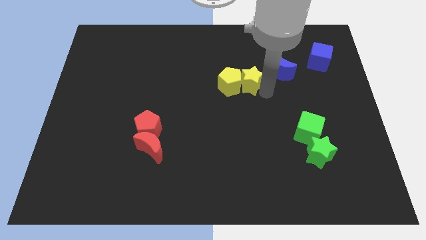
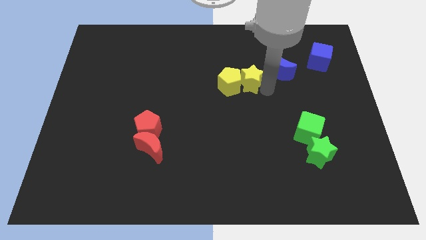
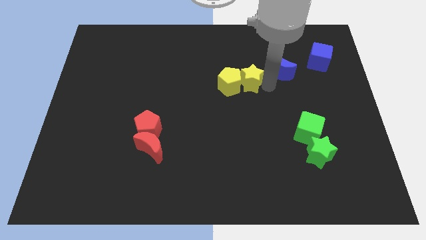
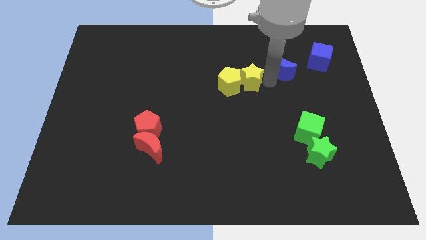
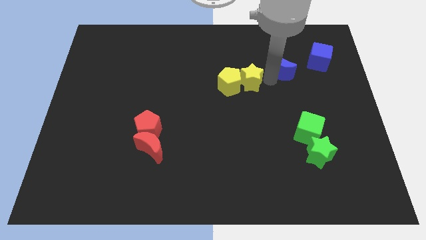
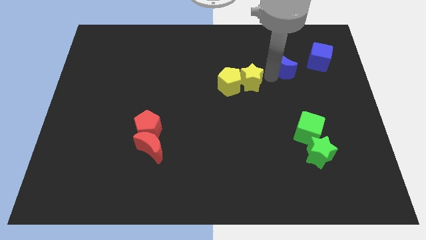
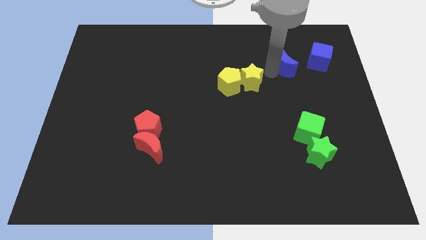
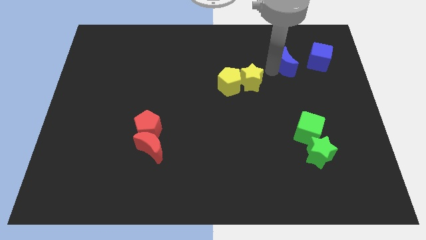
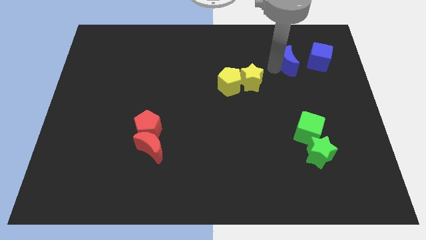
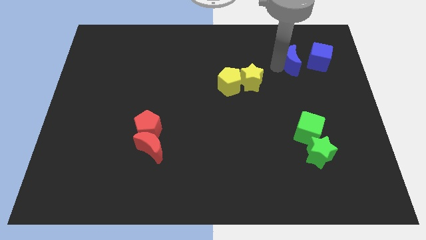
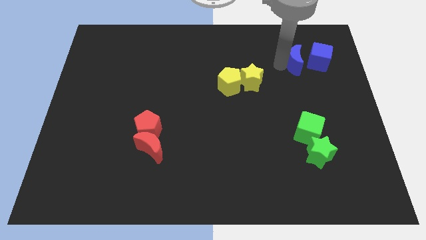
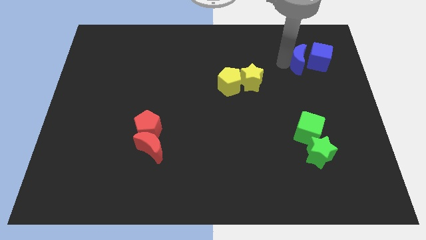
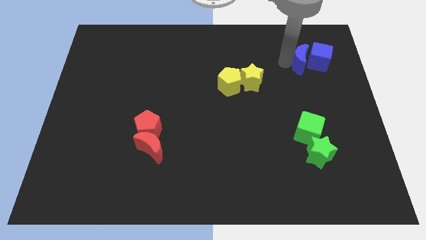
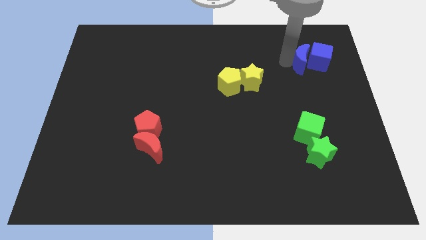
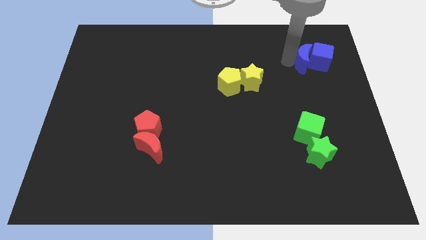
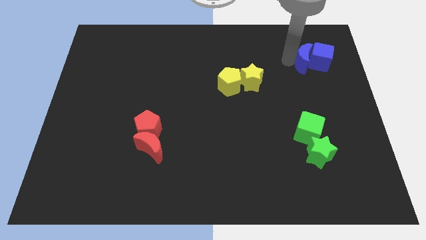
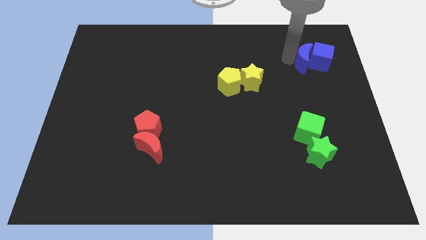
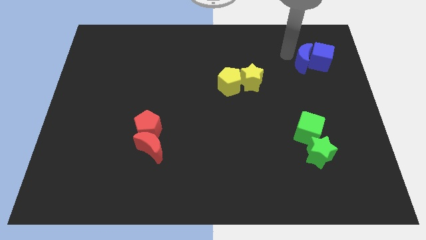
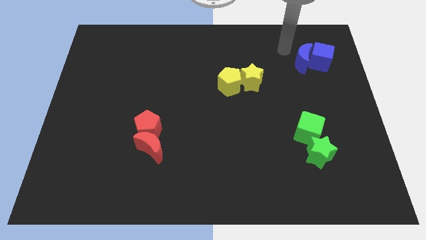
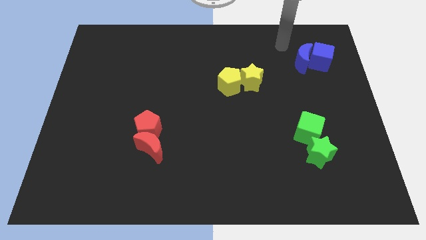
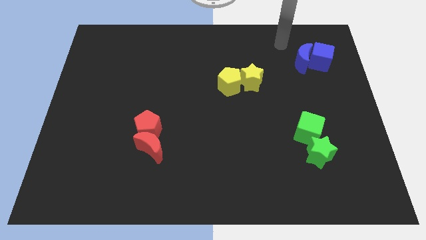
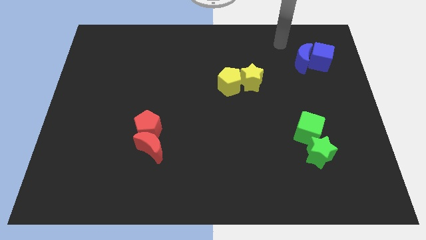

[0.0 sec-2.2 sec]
move your arm in between the yellow and blue blocks

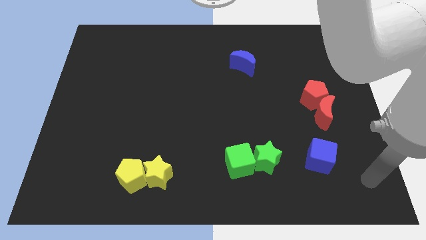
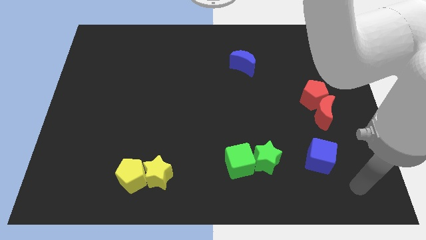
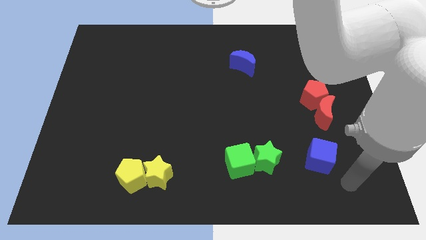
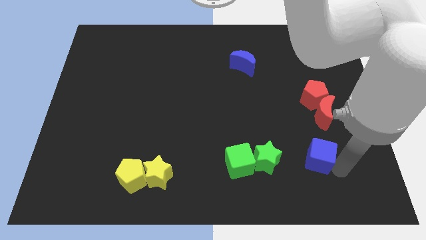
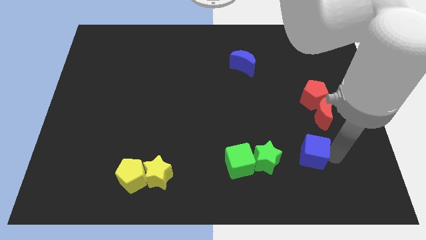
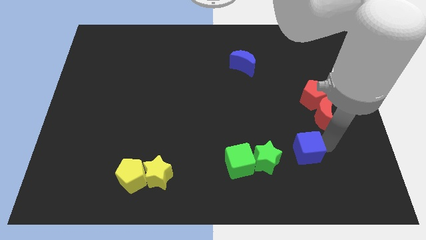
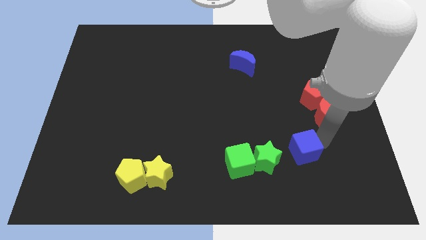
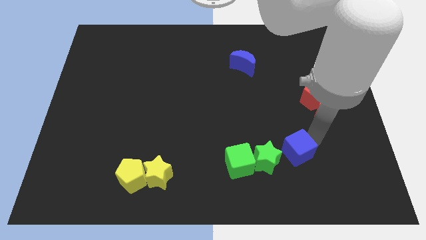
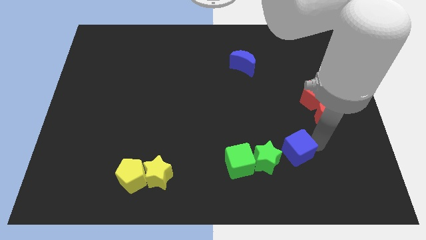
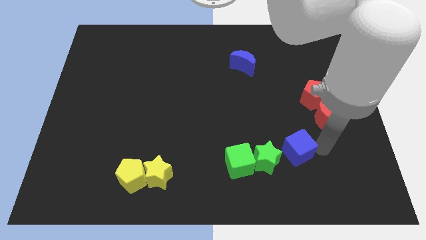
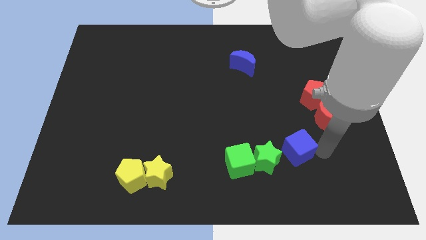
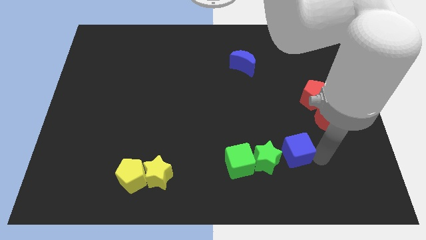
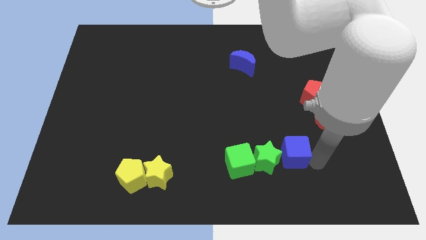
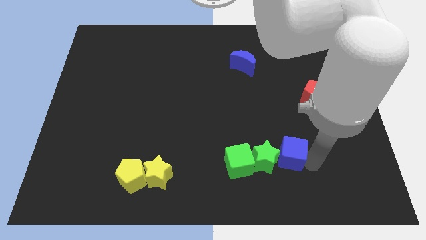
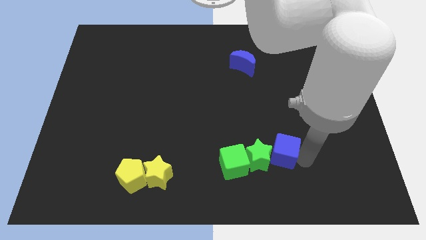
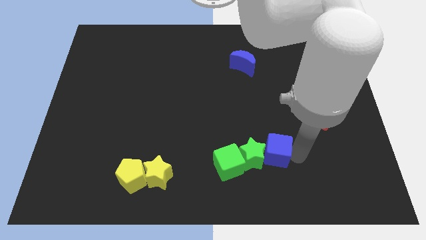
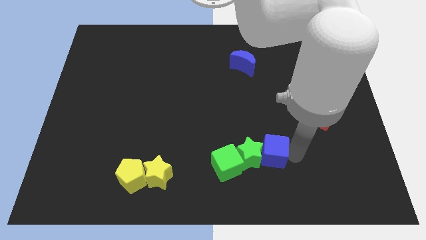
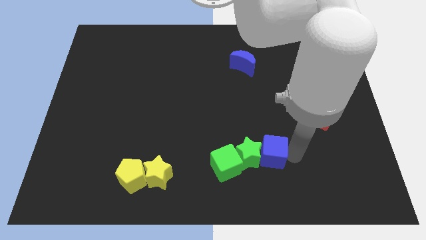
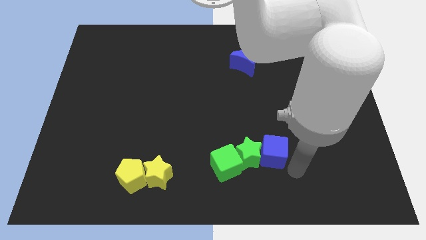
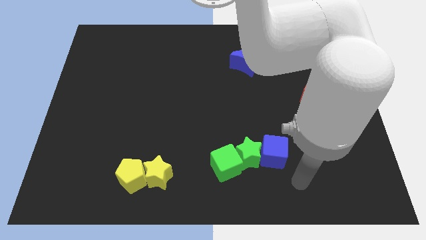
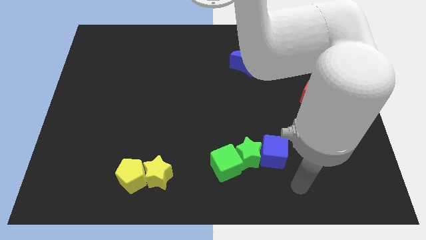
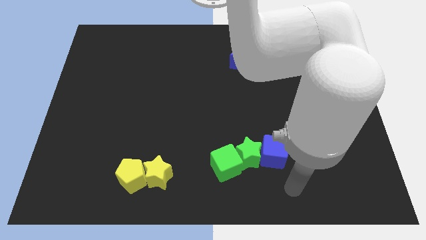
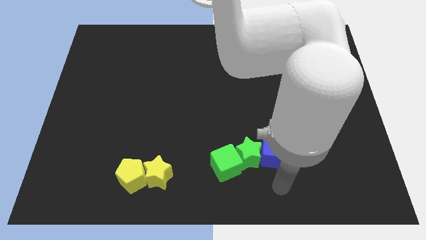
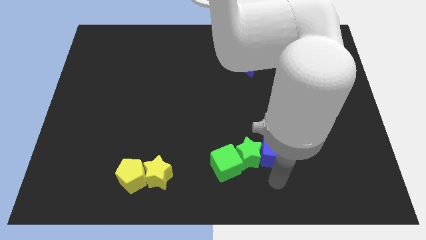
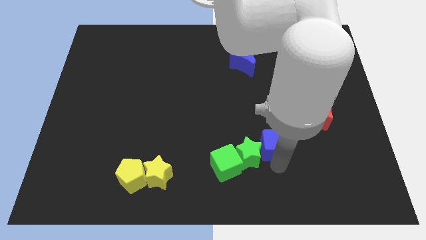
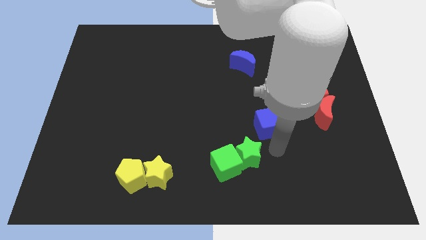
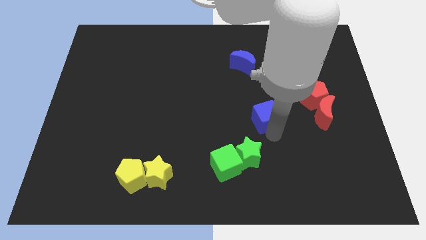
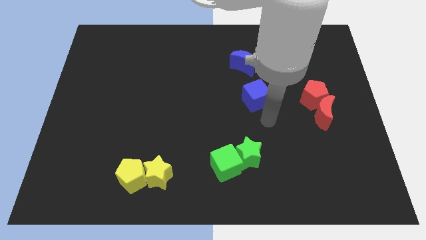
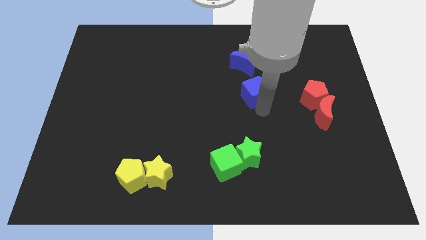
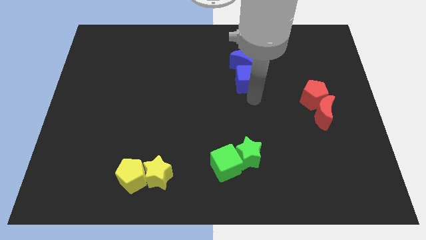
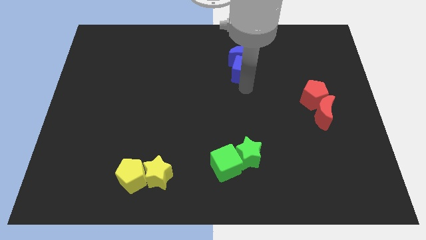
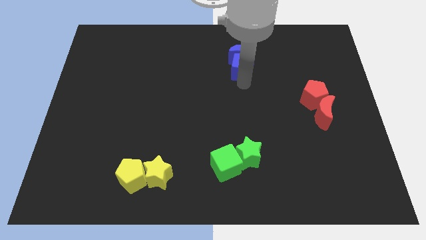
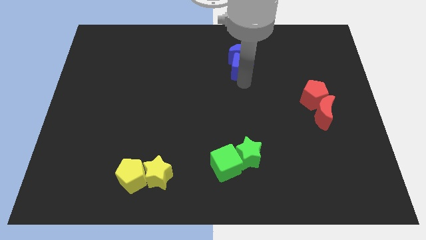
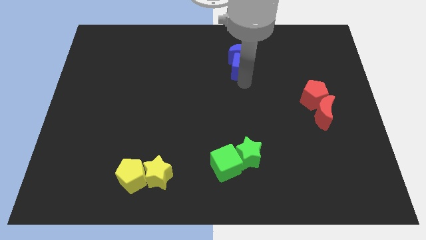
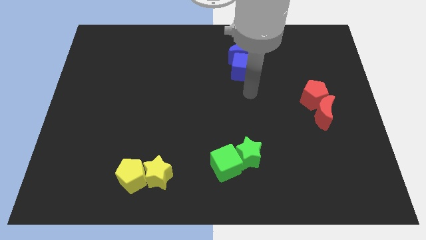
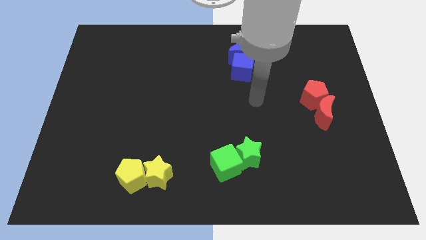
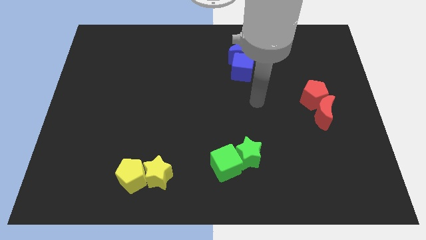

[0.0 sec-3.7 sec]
push blue cube close to blue crescent

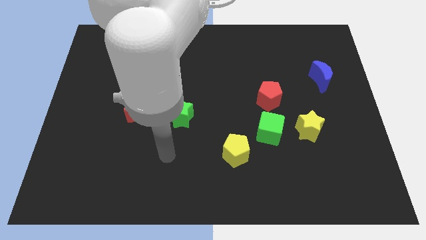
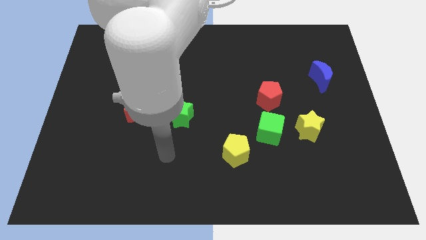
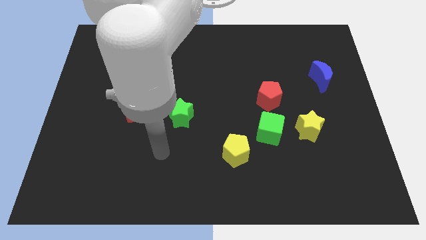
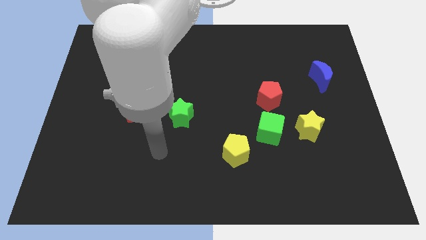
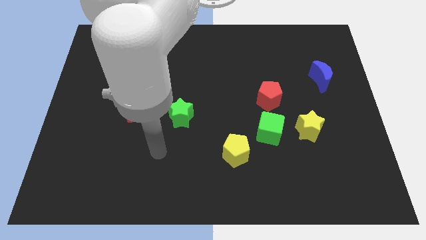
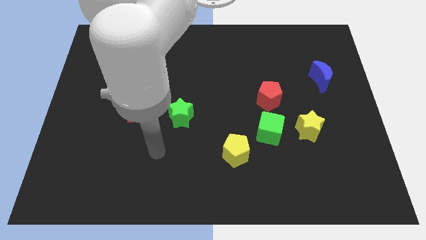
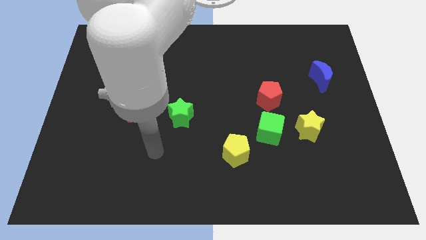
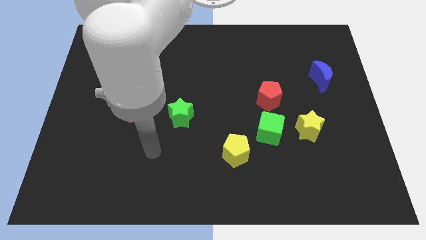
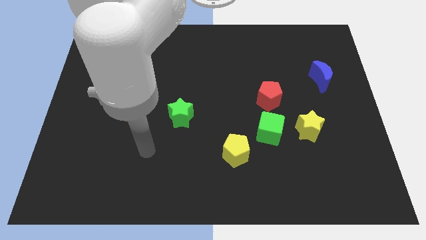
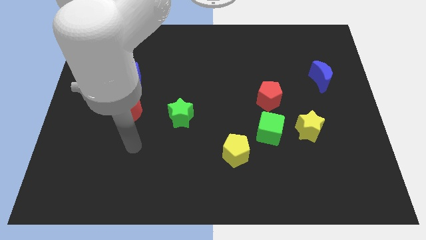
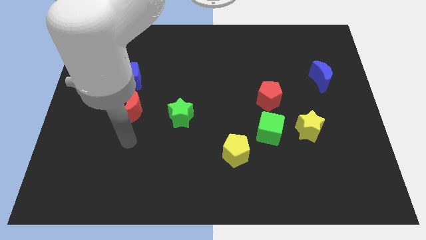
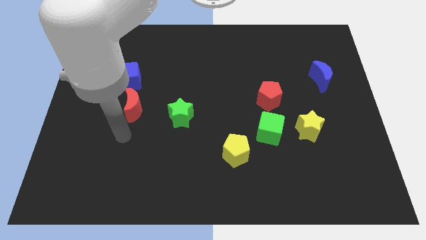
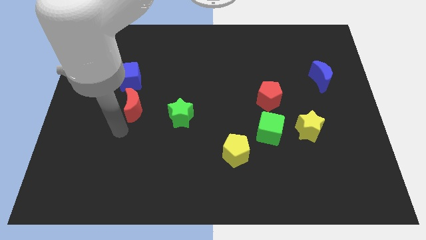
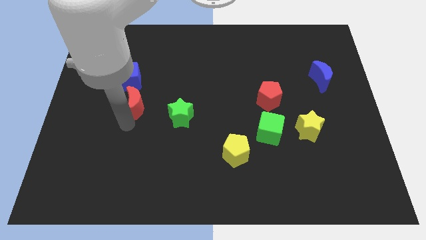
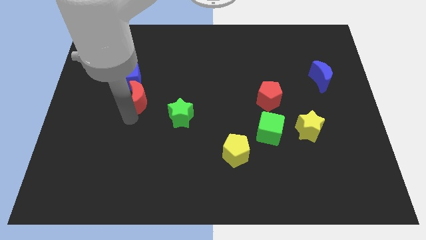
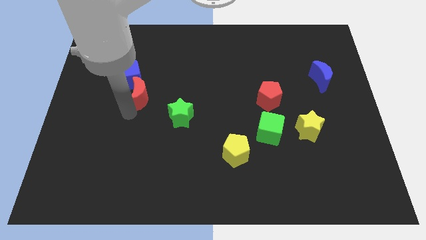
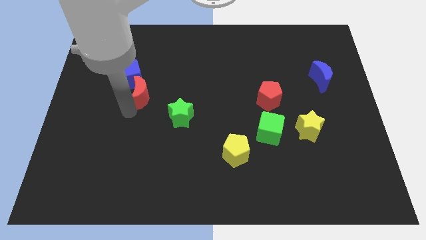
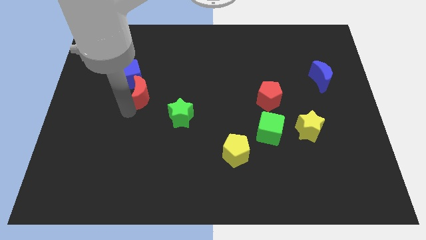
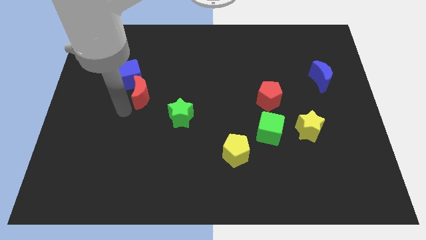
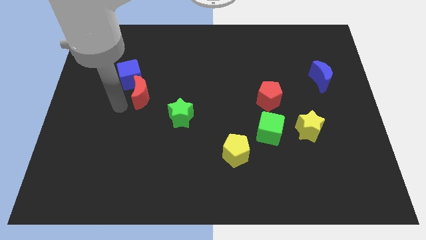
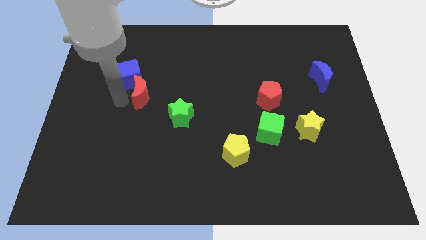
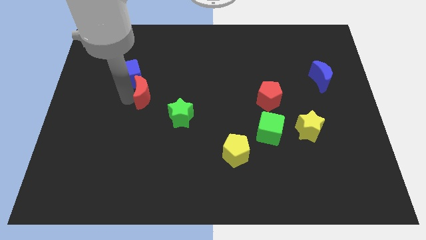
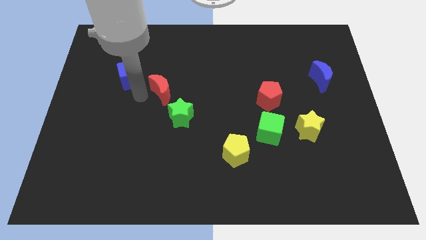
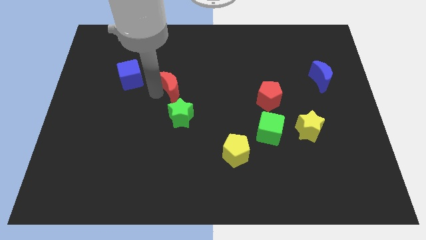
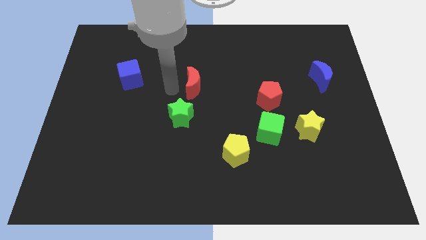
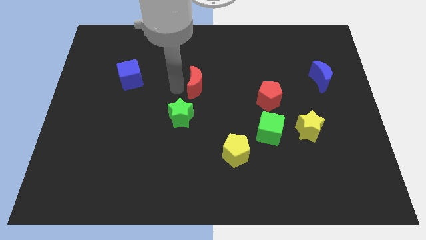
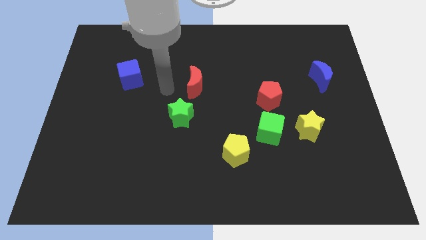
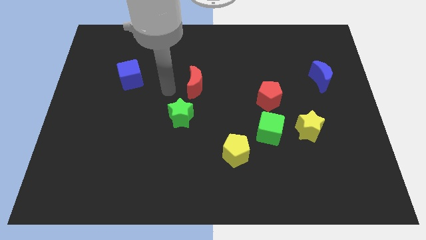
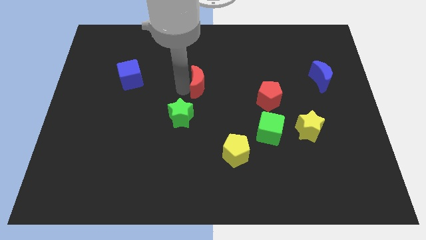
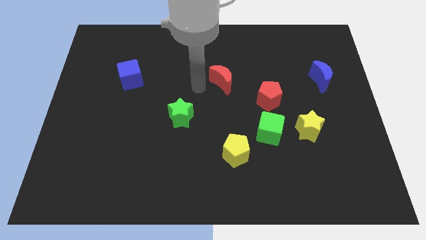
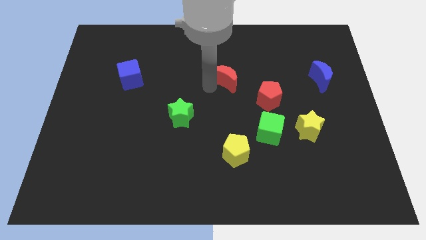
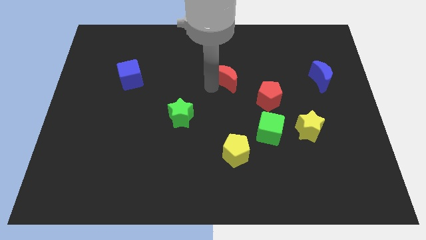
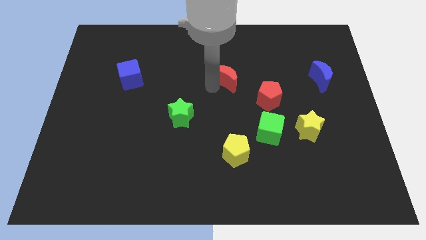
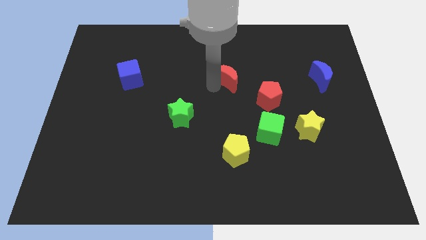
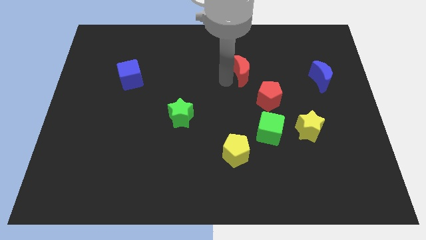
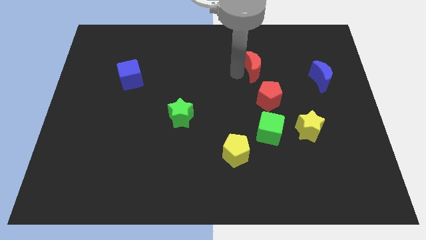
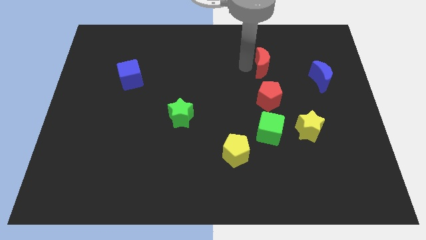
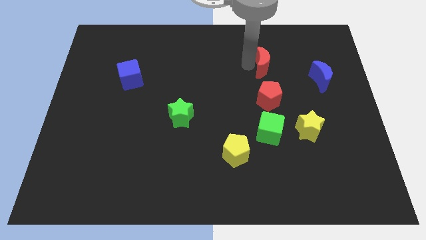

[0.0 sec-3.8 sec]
place the red moon above the red pentagon
